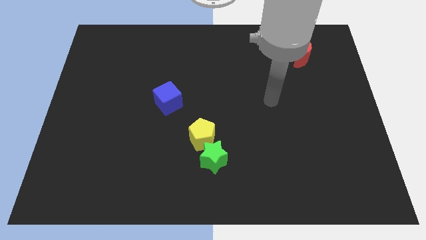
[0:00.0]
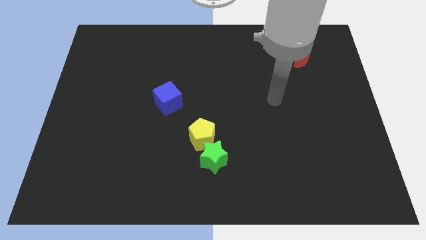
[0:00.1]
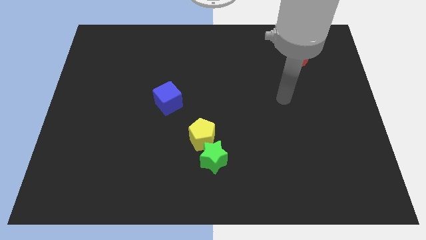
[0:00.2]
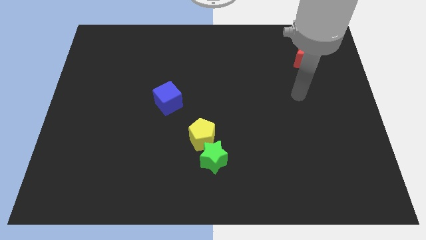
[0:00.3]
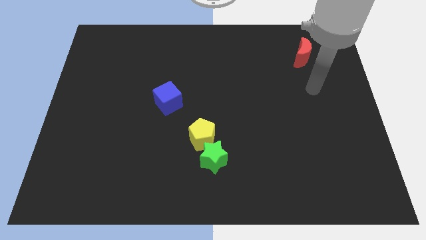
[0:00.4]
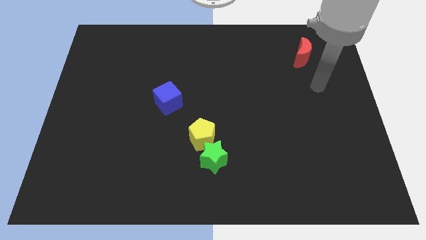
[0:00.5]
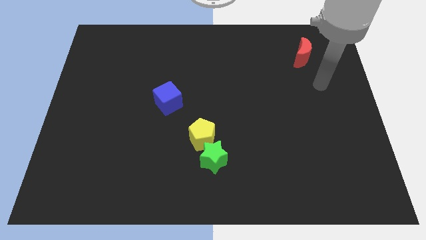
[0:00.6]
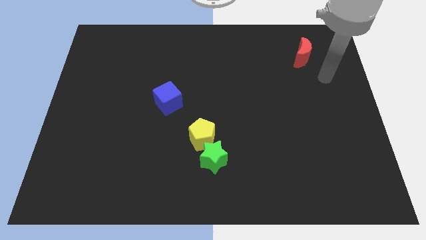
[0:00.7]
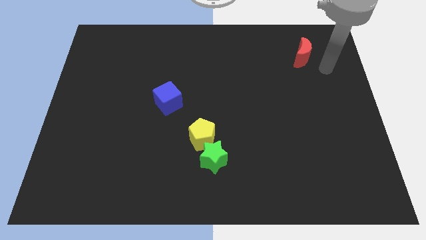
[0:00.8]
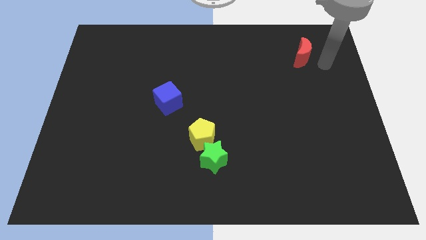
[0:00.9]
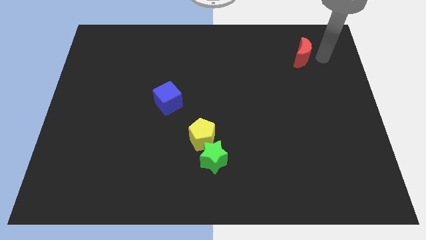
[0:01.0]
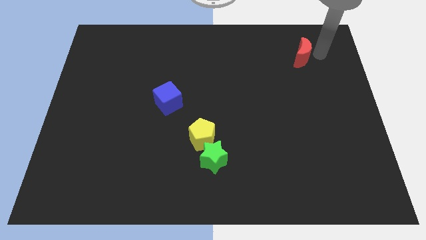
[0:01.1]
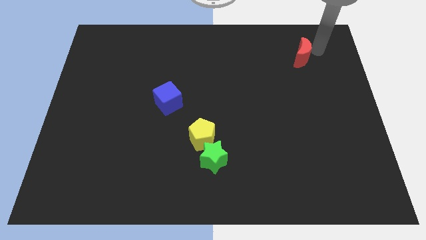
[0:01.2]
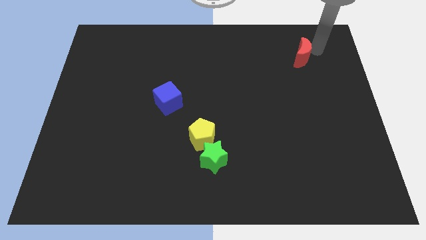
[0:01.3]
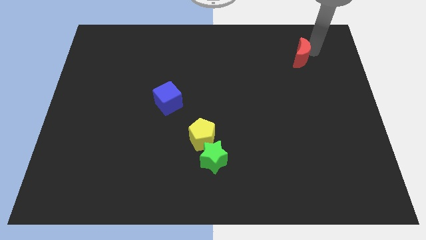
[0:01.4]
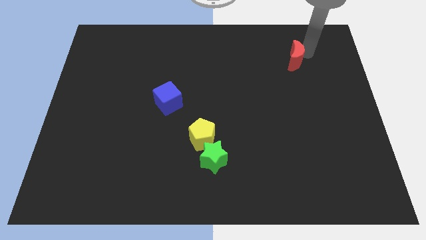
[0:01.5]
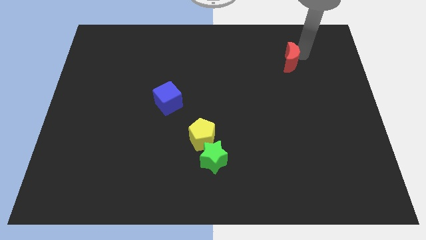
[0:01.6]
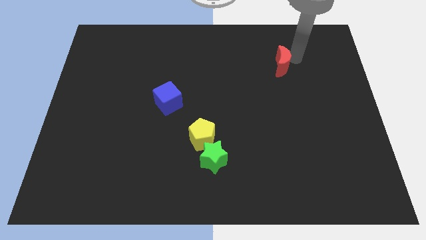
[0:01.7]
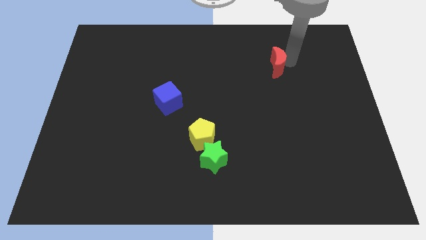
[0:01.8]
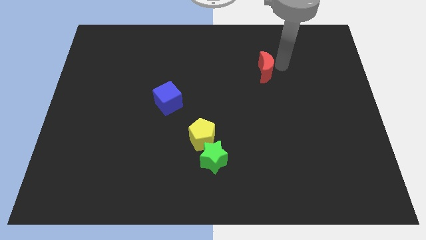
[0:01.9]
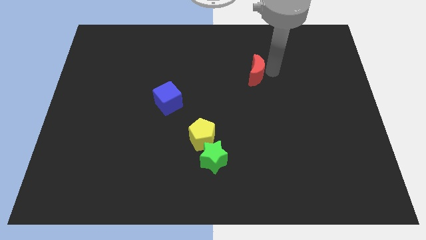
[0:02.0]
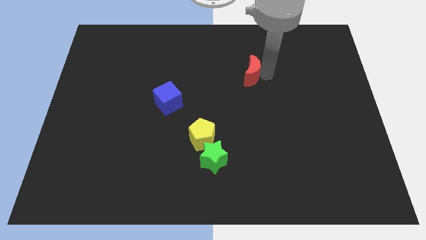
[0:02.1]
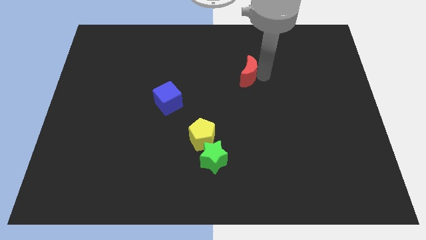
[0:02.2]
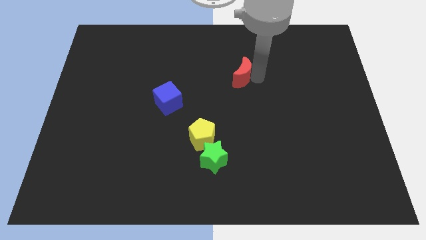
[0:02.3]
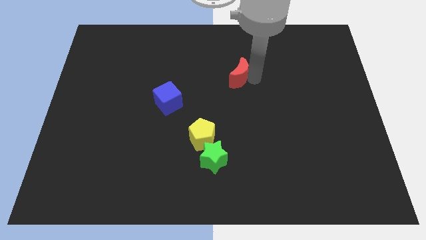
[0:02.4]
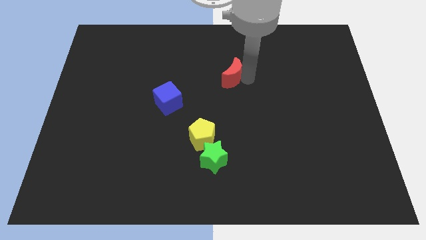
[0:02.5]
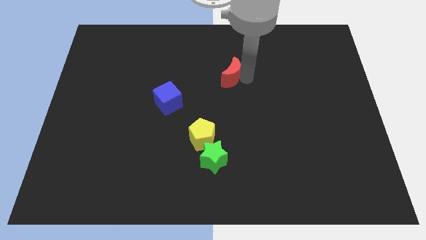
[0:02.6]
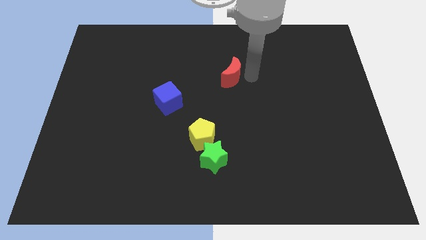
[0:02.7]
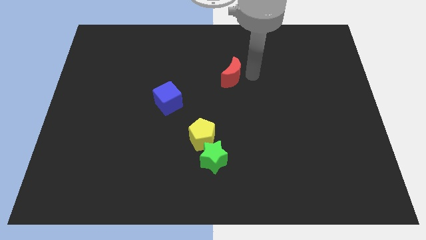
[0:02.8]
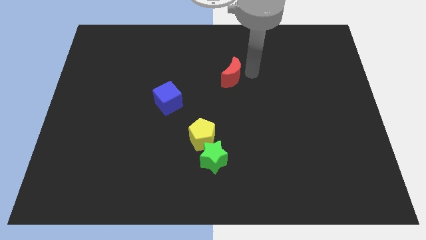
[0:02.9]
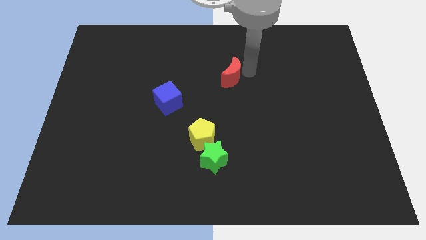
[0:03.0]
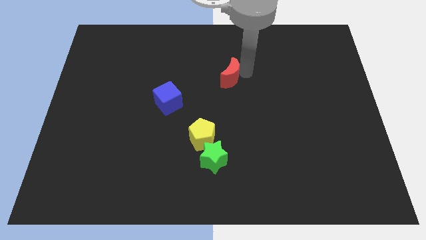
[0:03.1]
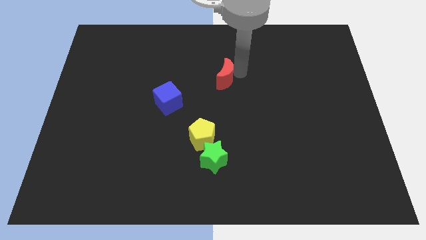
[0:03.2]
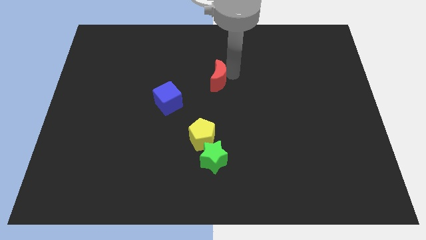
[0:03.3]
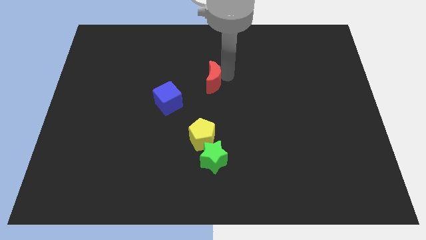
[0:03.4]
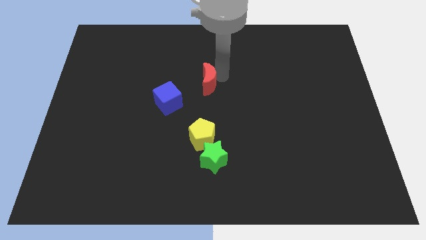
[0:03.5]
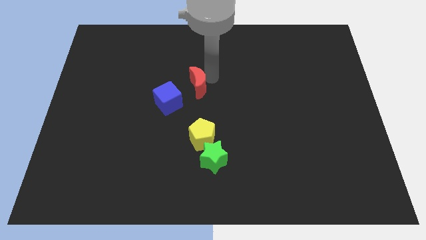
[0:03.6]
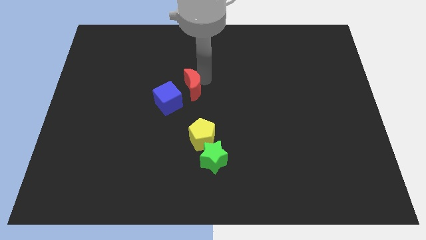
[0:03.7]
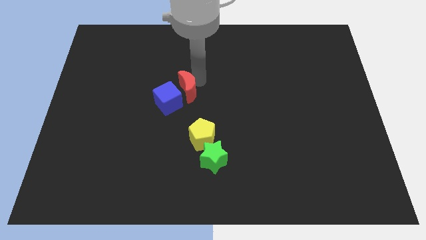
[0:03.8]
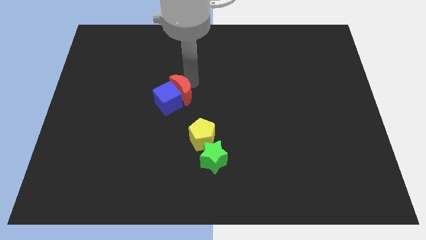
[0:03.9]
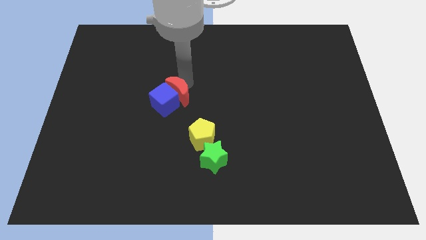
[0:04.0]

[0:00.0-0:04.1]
slide the moon close to the cube

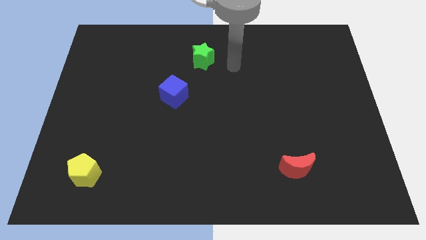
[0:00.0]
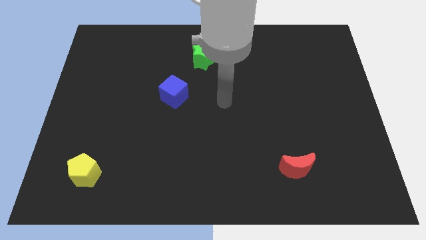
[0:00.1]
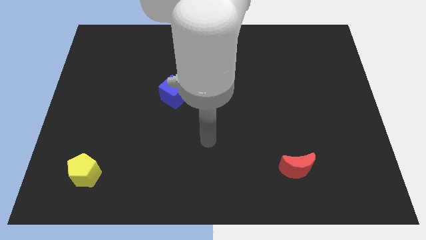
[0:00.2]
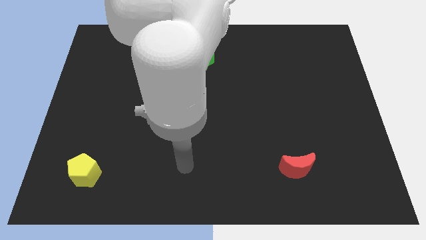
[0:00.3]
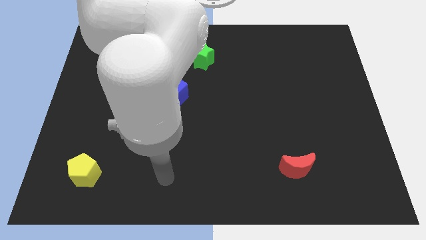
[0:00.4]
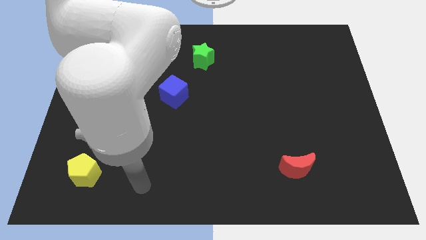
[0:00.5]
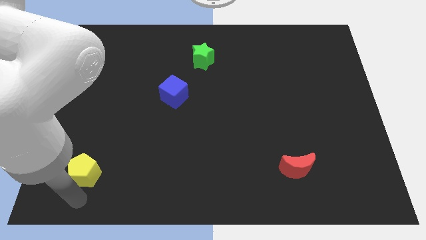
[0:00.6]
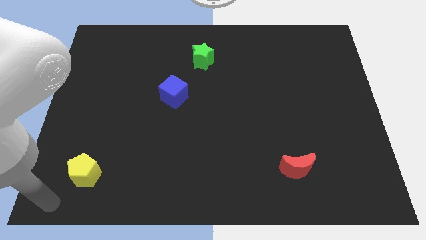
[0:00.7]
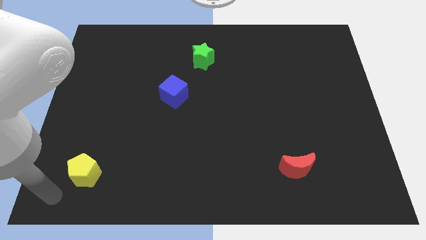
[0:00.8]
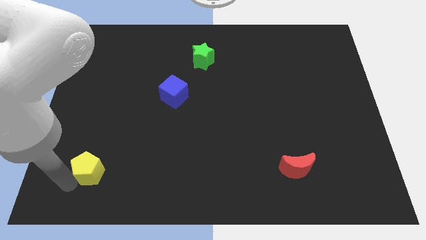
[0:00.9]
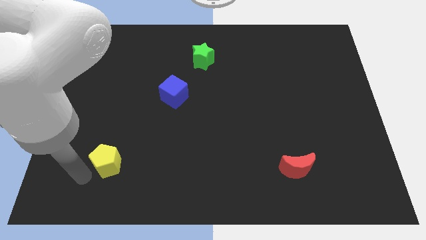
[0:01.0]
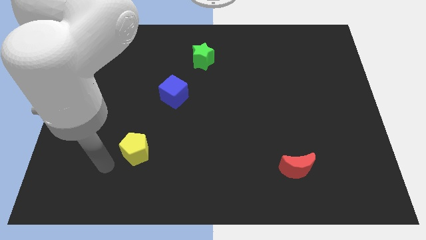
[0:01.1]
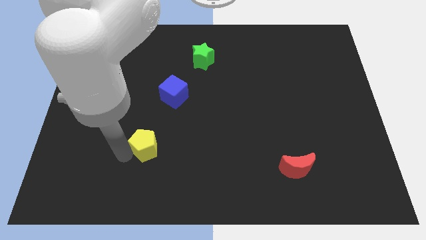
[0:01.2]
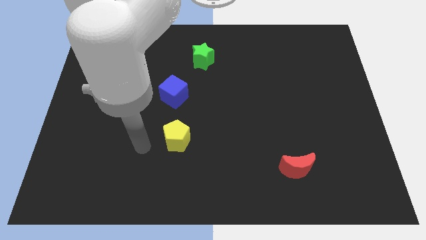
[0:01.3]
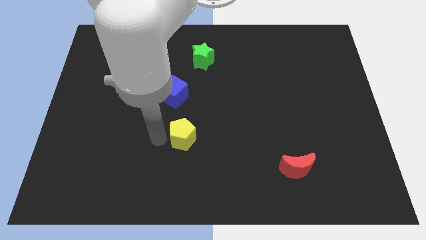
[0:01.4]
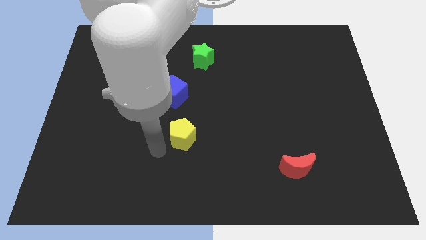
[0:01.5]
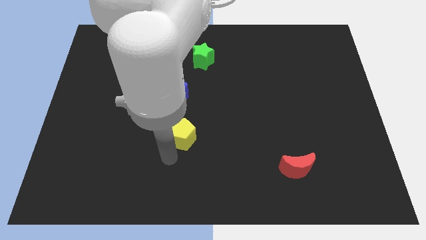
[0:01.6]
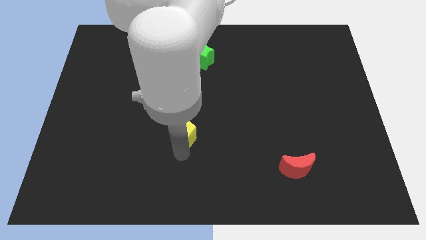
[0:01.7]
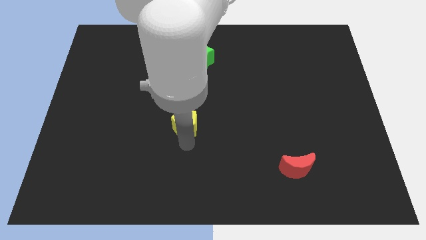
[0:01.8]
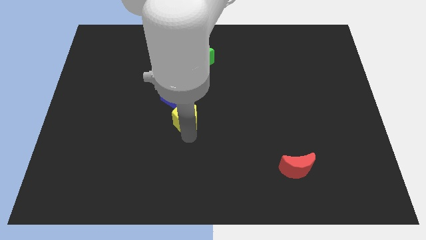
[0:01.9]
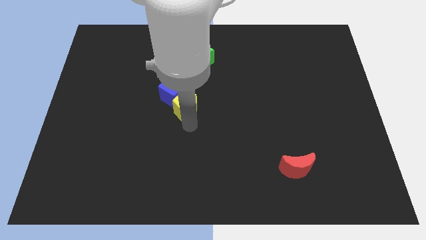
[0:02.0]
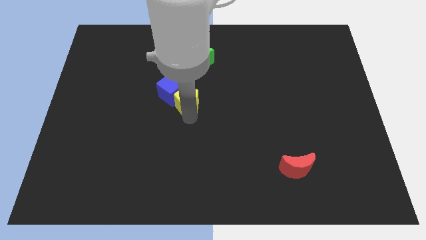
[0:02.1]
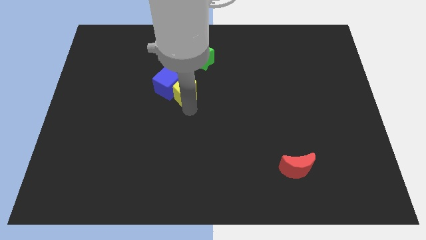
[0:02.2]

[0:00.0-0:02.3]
slide the pentagon close to the cube

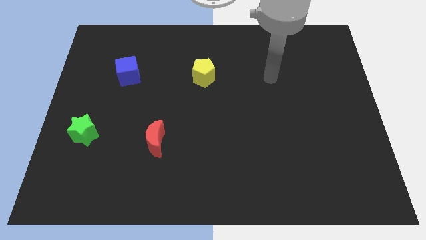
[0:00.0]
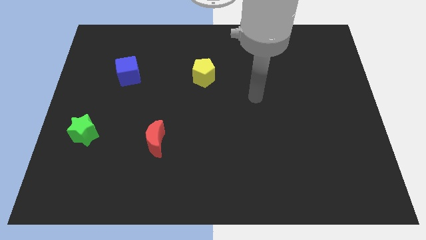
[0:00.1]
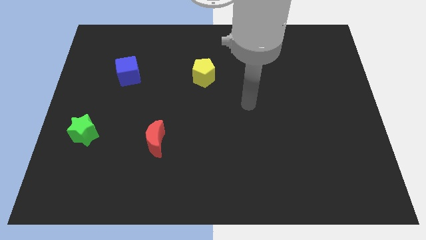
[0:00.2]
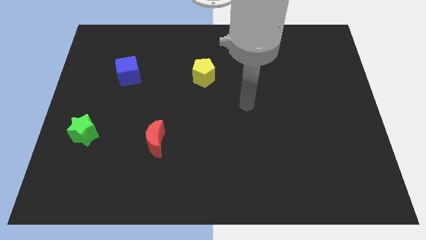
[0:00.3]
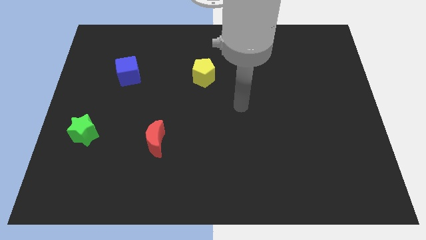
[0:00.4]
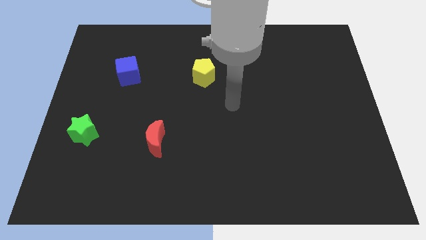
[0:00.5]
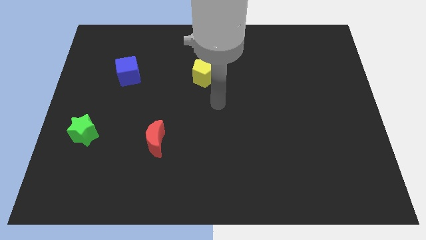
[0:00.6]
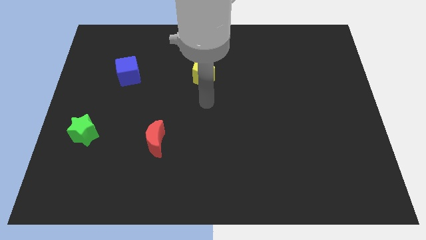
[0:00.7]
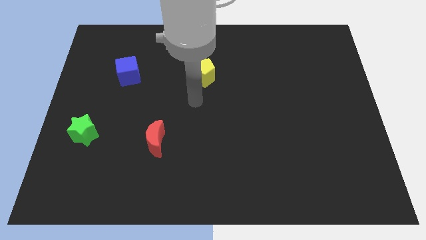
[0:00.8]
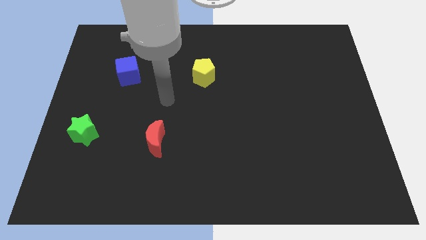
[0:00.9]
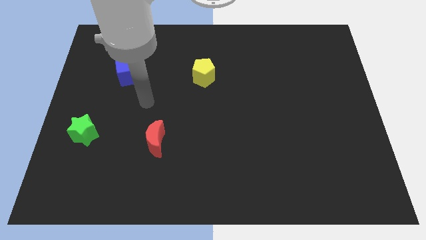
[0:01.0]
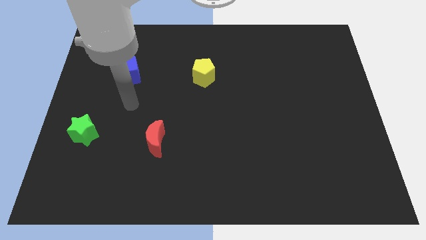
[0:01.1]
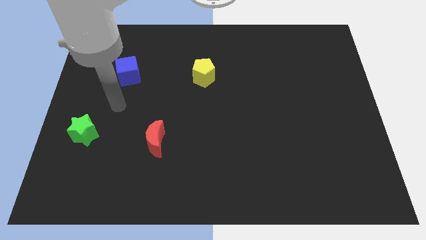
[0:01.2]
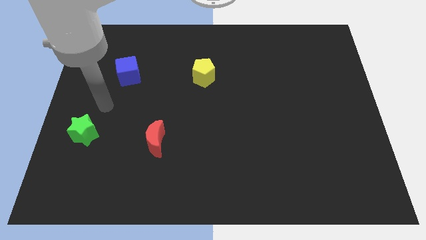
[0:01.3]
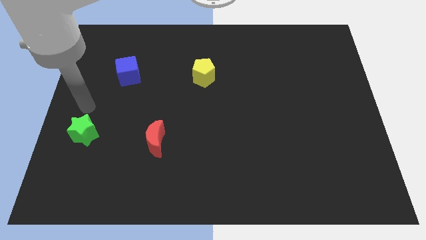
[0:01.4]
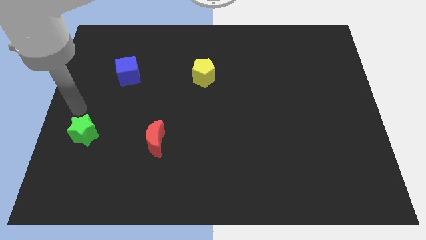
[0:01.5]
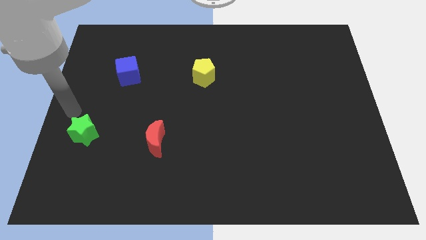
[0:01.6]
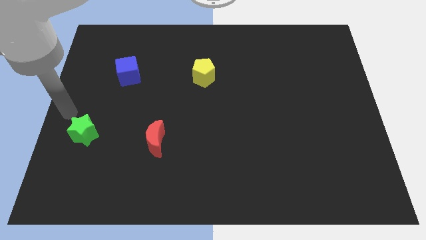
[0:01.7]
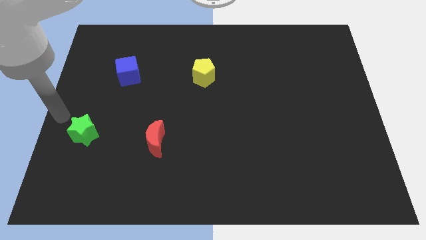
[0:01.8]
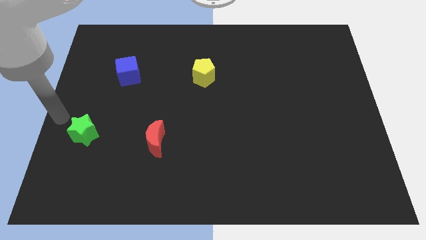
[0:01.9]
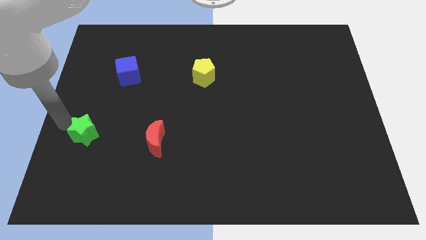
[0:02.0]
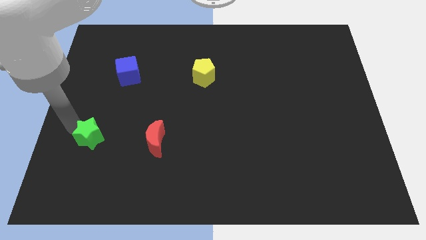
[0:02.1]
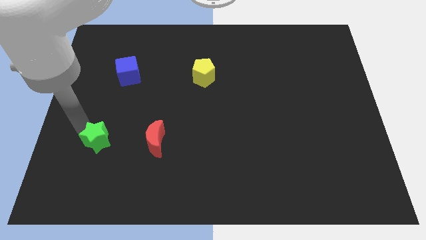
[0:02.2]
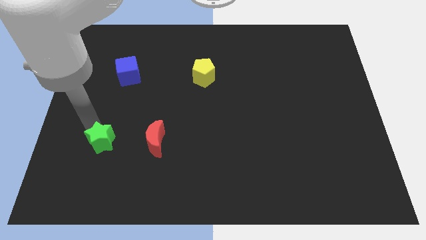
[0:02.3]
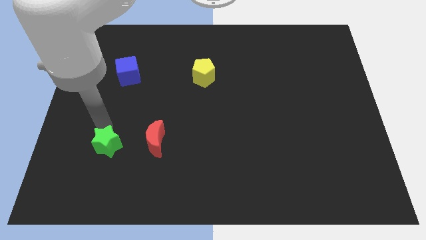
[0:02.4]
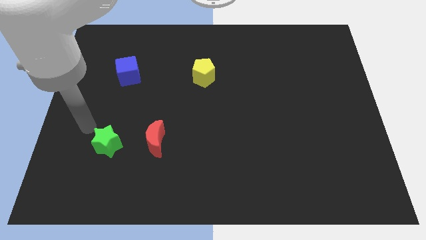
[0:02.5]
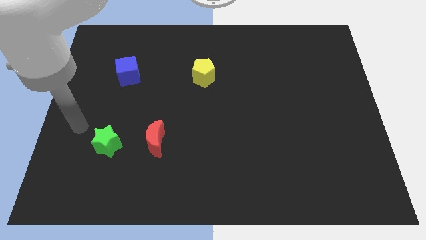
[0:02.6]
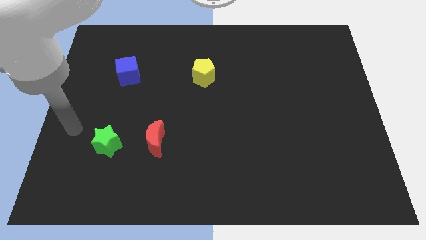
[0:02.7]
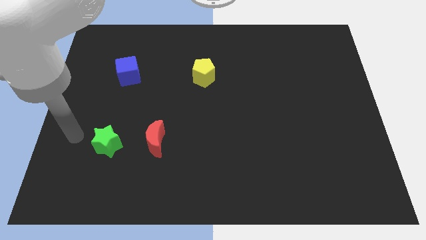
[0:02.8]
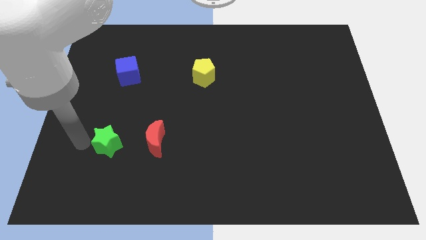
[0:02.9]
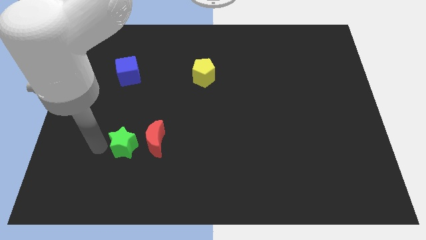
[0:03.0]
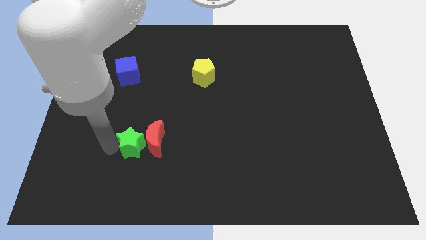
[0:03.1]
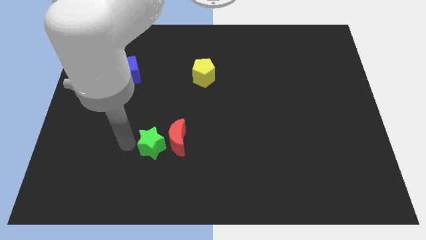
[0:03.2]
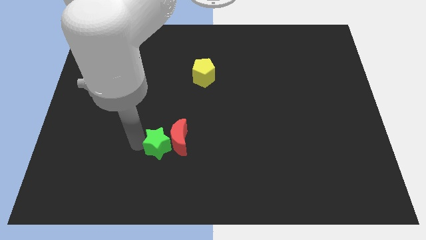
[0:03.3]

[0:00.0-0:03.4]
put the green star next to the red moon
